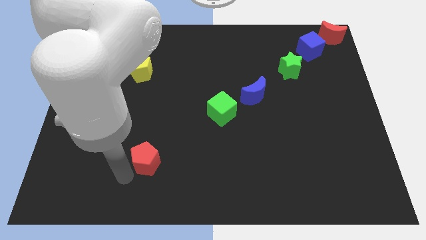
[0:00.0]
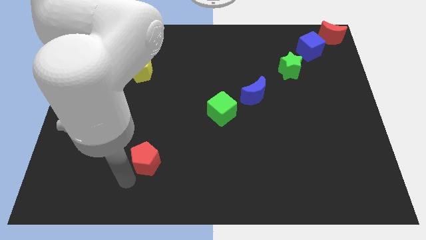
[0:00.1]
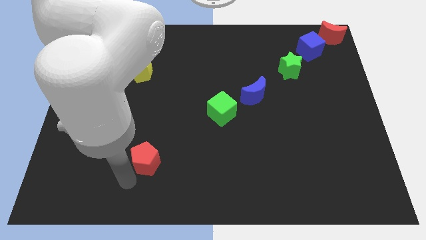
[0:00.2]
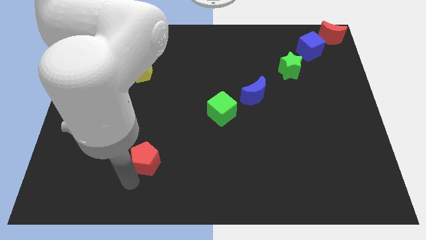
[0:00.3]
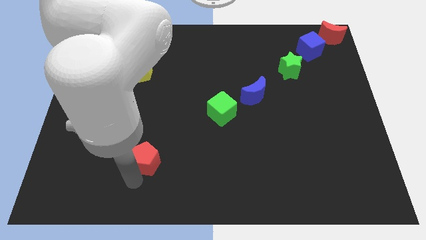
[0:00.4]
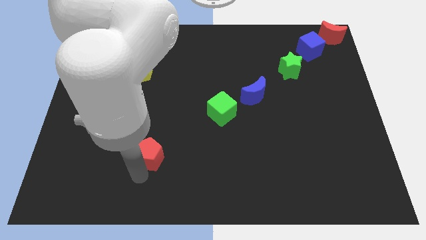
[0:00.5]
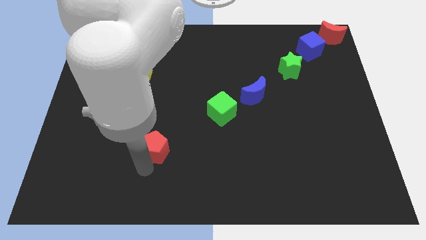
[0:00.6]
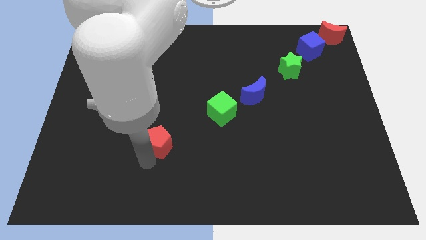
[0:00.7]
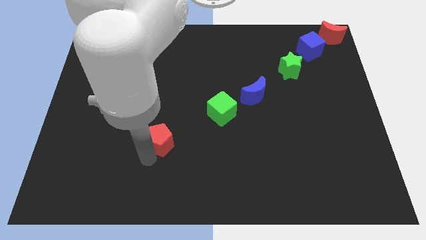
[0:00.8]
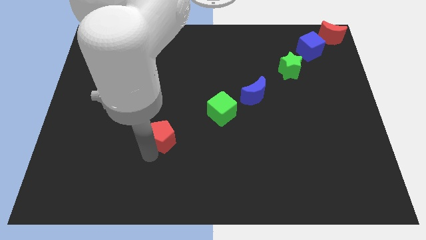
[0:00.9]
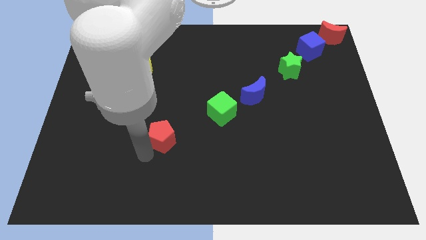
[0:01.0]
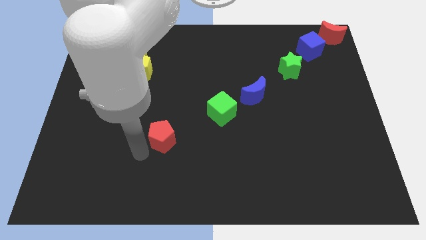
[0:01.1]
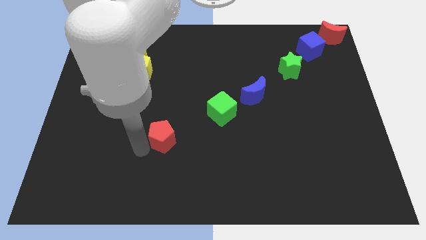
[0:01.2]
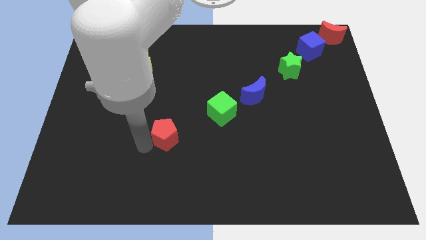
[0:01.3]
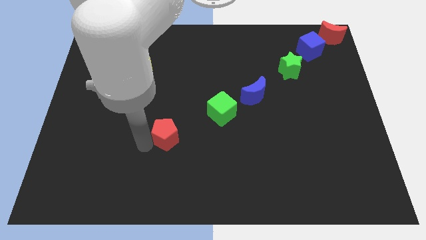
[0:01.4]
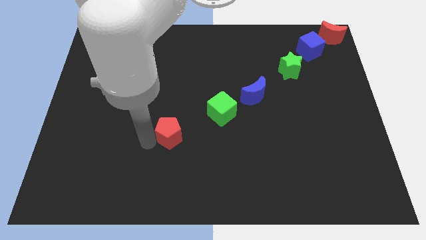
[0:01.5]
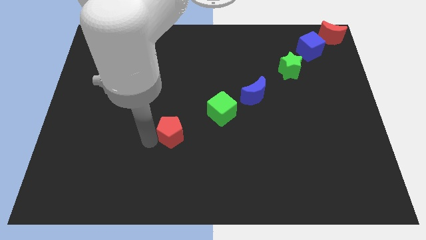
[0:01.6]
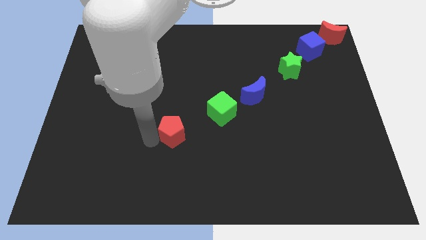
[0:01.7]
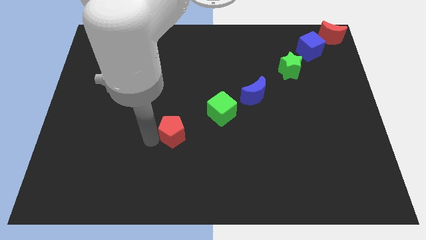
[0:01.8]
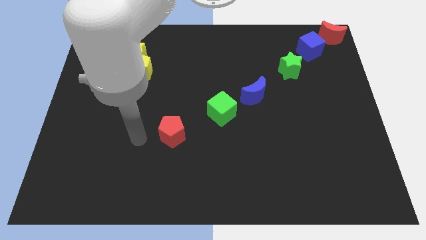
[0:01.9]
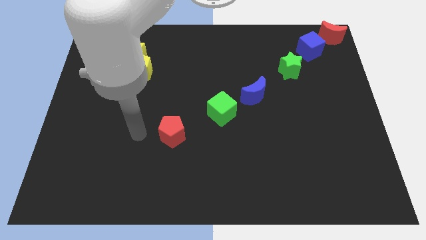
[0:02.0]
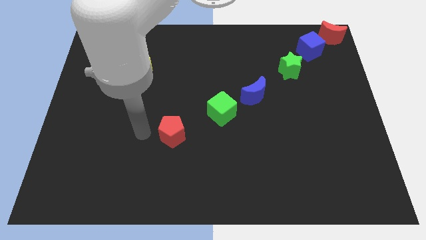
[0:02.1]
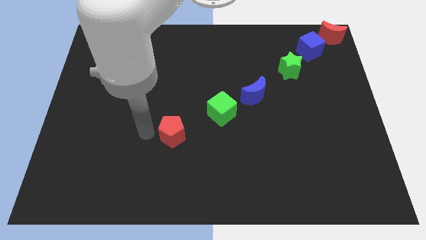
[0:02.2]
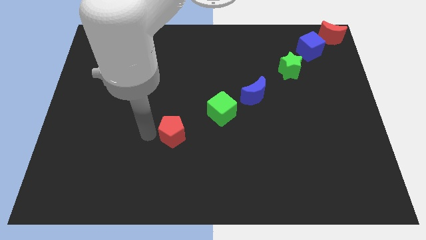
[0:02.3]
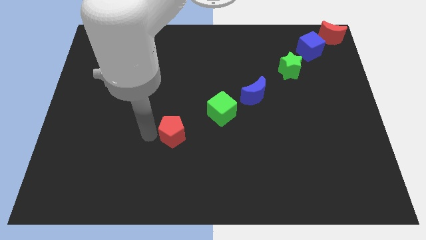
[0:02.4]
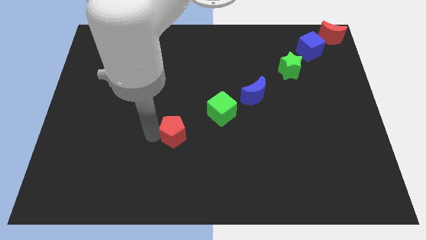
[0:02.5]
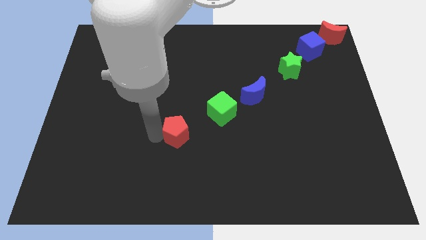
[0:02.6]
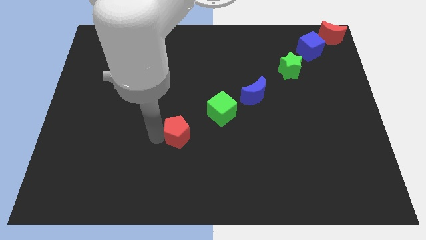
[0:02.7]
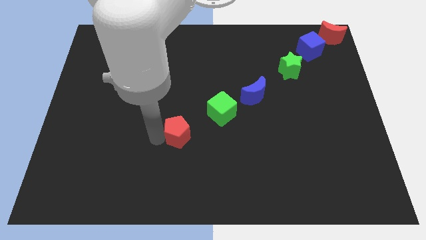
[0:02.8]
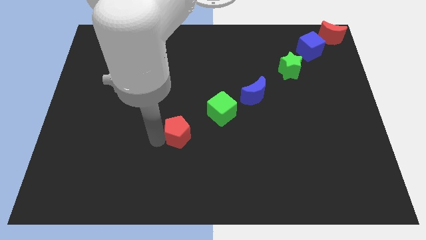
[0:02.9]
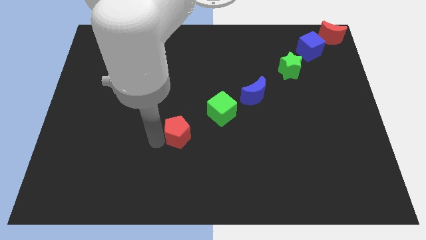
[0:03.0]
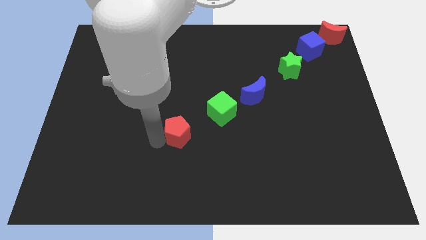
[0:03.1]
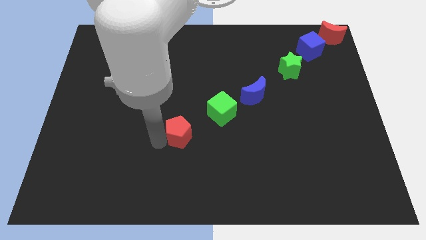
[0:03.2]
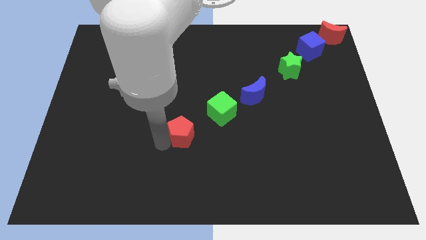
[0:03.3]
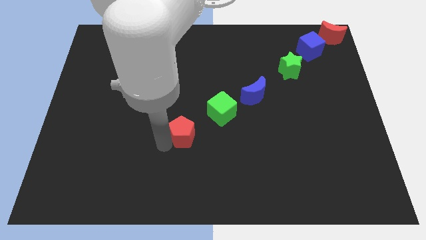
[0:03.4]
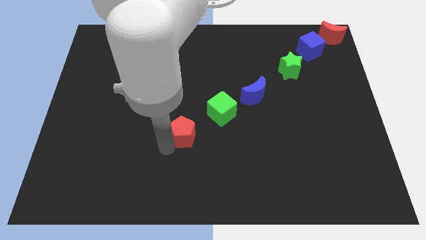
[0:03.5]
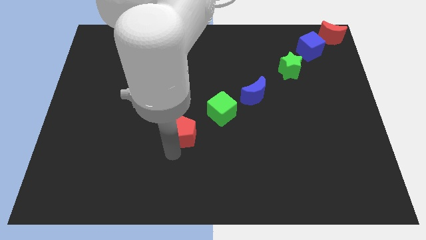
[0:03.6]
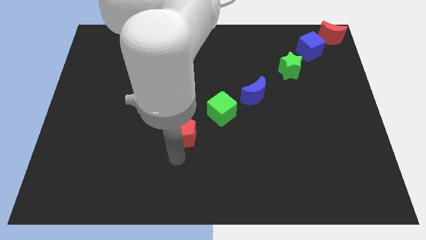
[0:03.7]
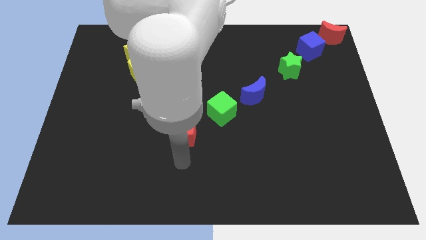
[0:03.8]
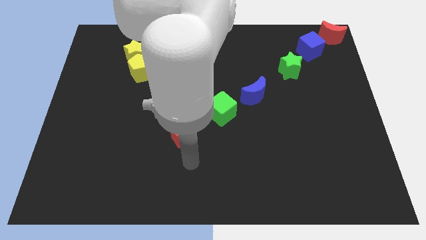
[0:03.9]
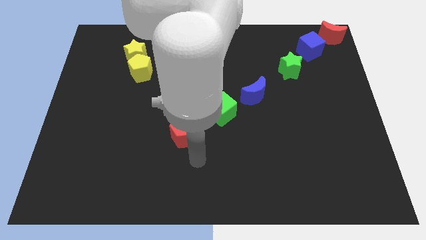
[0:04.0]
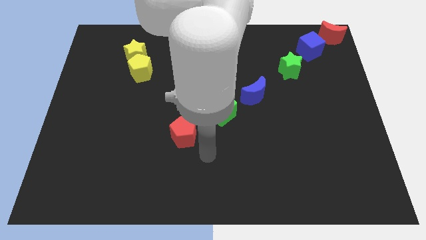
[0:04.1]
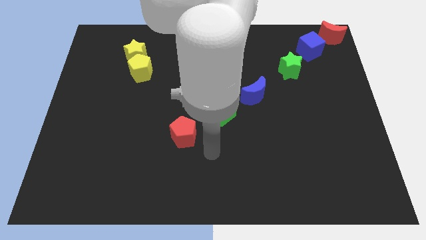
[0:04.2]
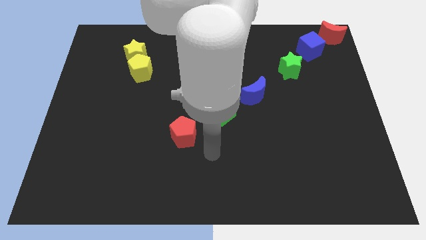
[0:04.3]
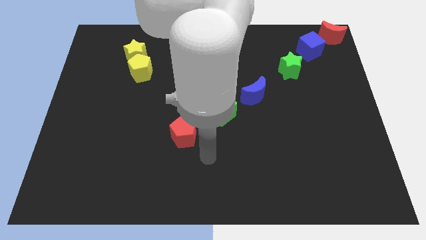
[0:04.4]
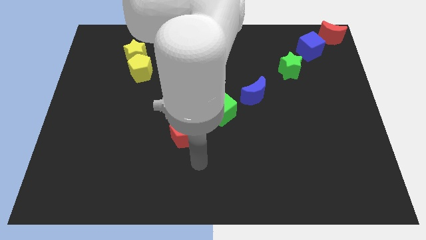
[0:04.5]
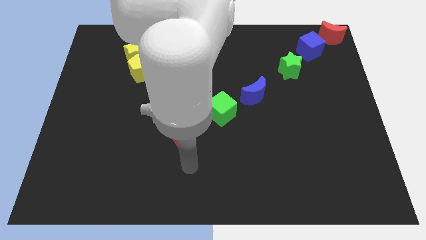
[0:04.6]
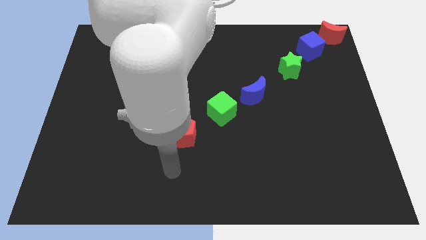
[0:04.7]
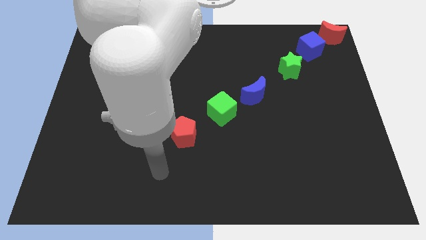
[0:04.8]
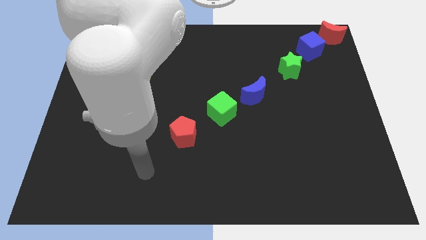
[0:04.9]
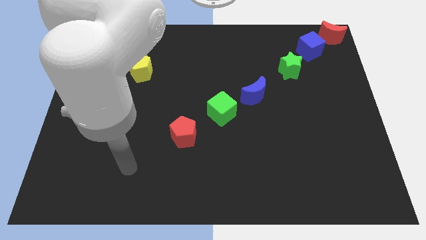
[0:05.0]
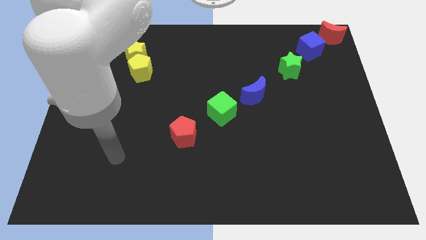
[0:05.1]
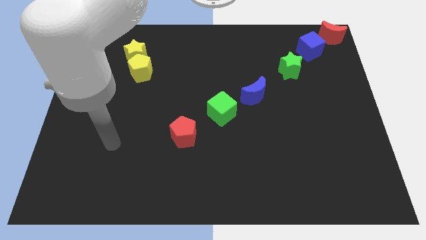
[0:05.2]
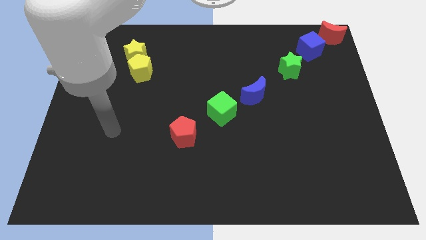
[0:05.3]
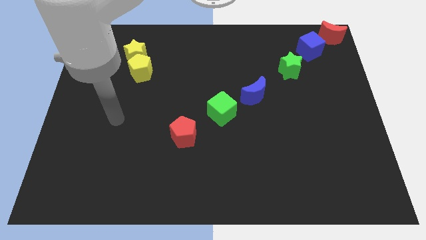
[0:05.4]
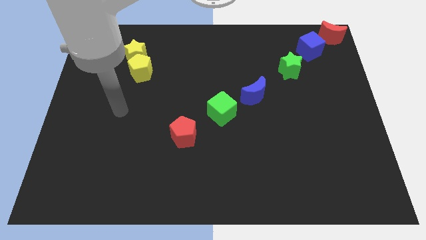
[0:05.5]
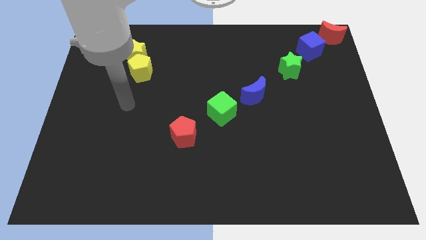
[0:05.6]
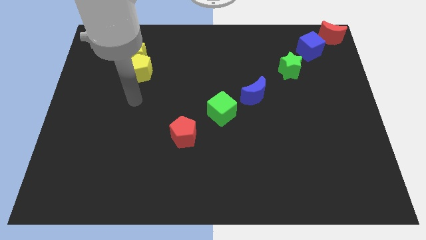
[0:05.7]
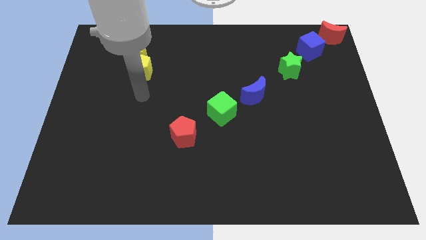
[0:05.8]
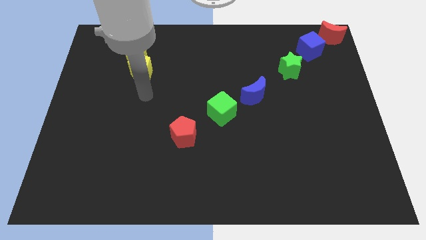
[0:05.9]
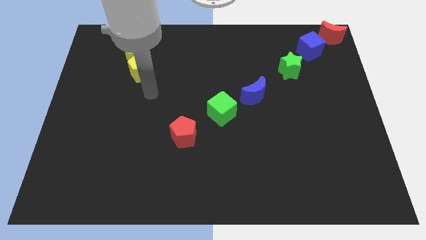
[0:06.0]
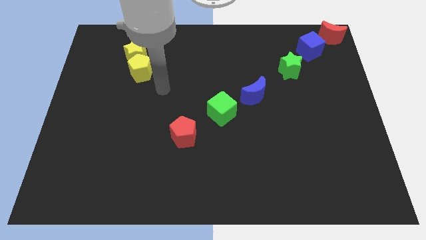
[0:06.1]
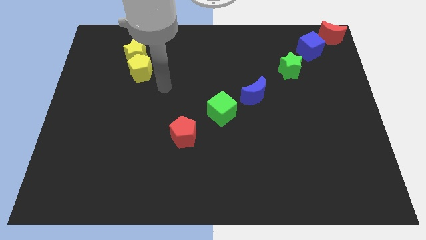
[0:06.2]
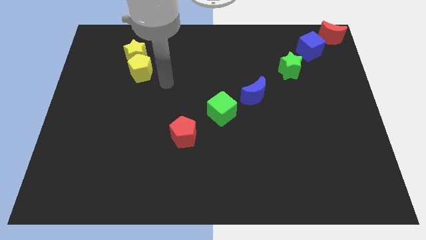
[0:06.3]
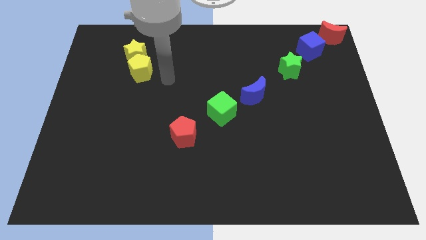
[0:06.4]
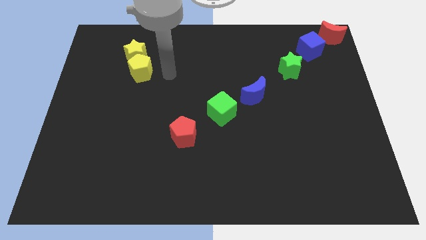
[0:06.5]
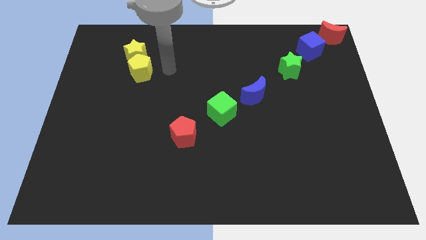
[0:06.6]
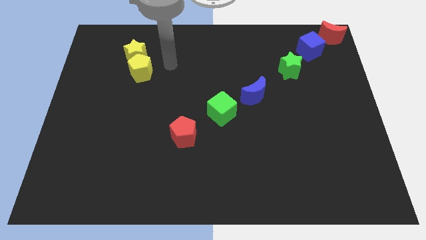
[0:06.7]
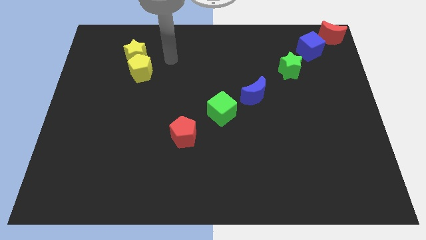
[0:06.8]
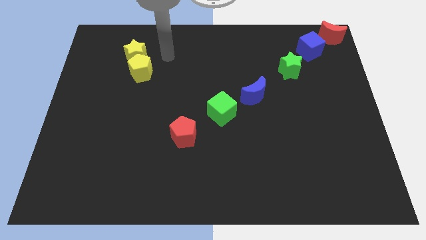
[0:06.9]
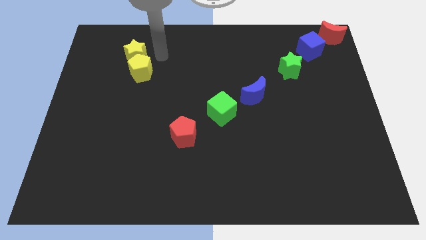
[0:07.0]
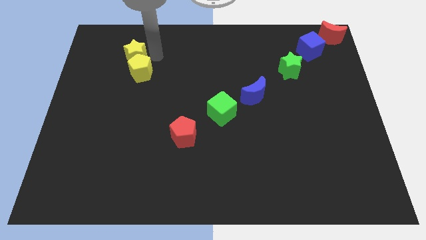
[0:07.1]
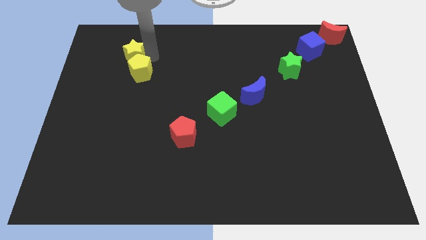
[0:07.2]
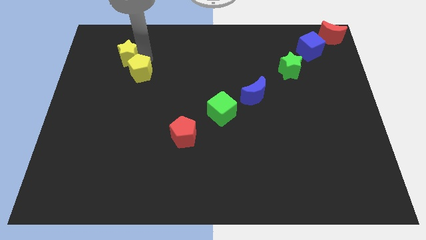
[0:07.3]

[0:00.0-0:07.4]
push the red pentagon to the left bottom of the green cube

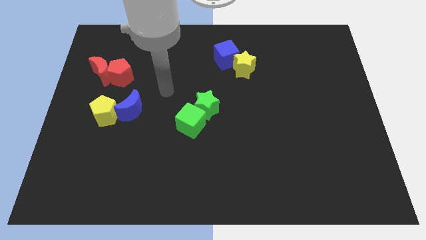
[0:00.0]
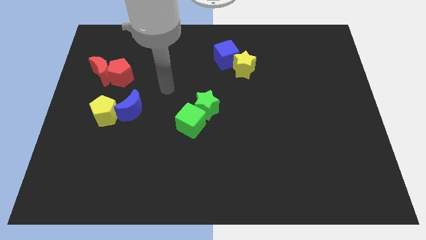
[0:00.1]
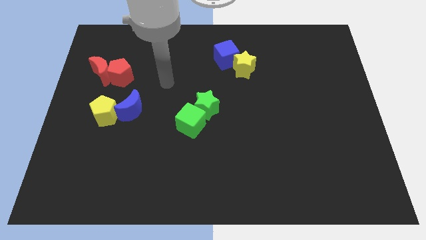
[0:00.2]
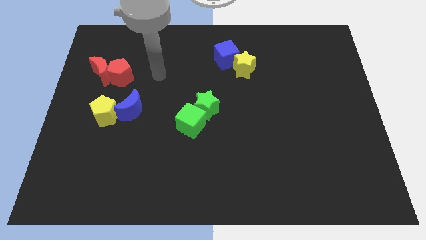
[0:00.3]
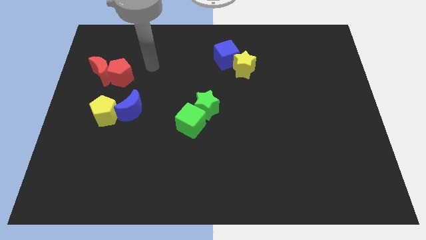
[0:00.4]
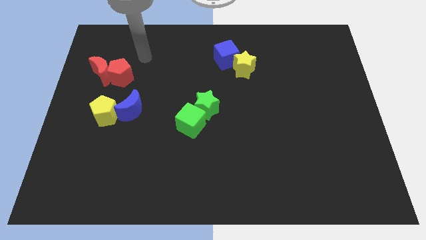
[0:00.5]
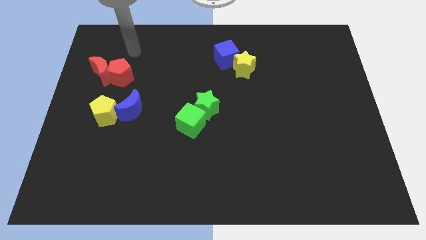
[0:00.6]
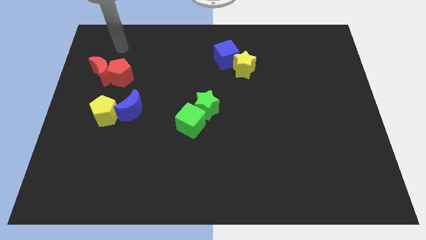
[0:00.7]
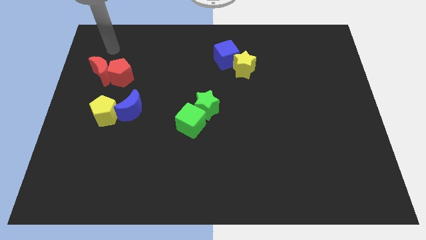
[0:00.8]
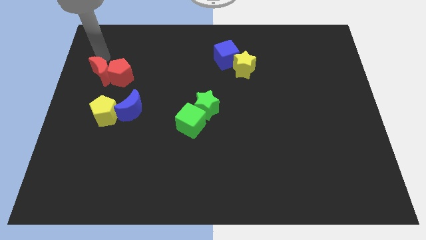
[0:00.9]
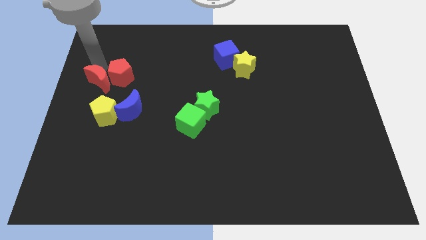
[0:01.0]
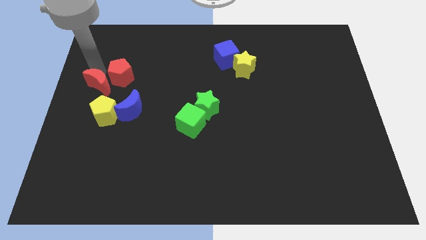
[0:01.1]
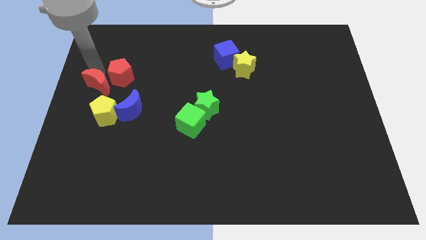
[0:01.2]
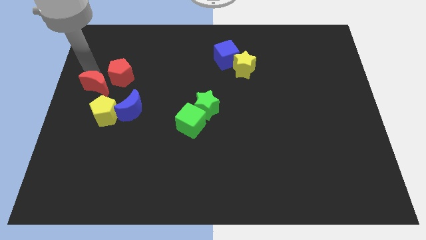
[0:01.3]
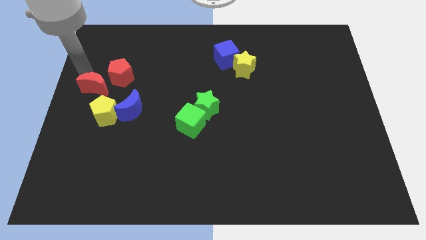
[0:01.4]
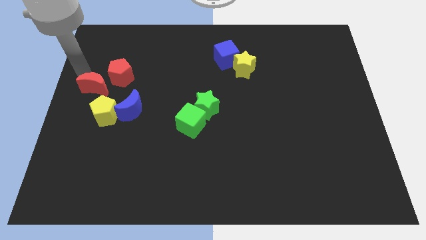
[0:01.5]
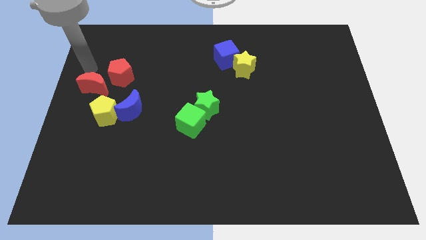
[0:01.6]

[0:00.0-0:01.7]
push the red moon slightly to the down
